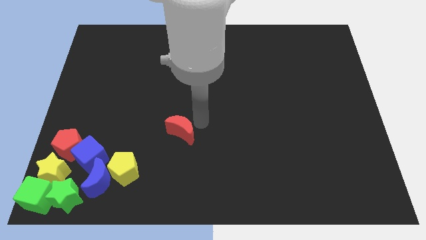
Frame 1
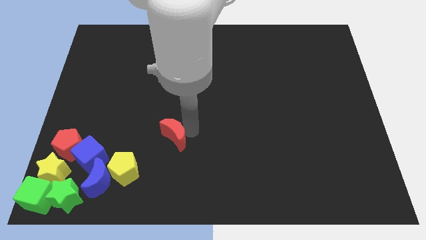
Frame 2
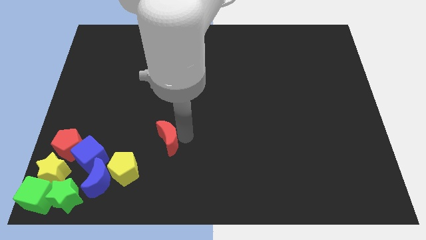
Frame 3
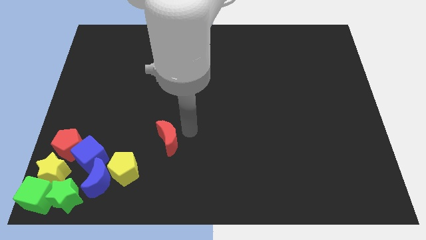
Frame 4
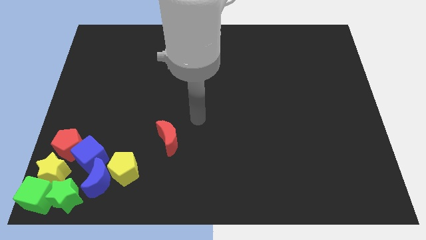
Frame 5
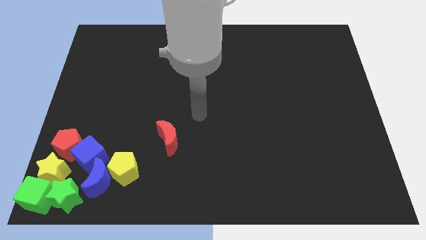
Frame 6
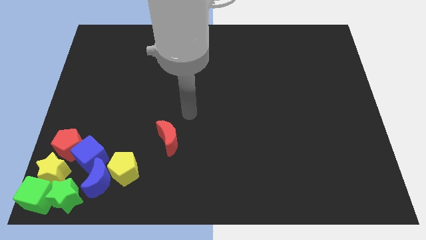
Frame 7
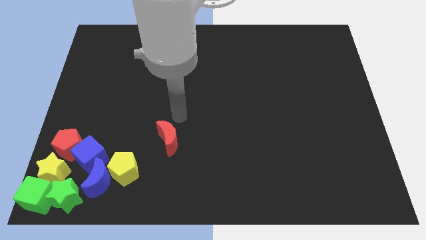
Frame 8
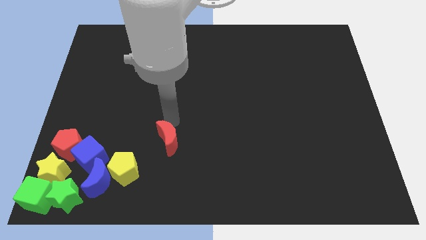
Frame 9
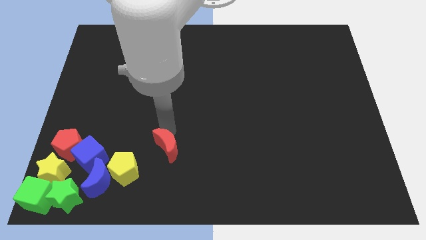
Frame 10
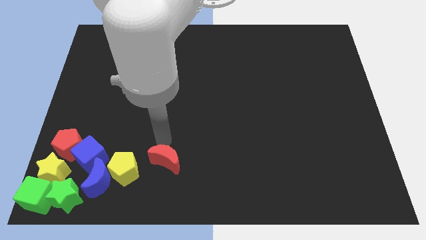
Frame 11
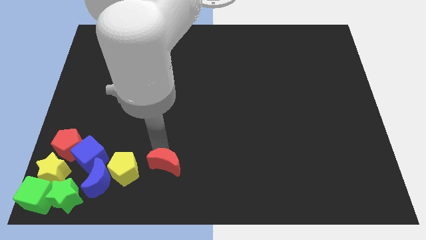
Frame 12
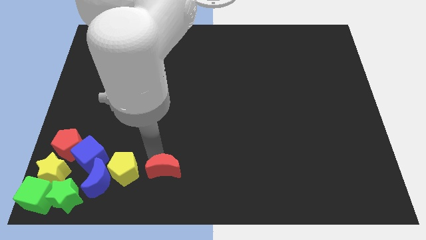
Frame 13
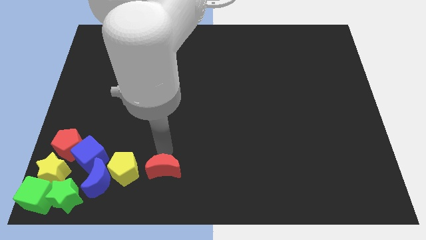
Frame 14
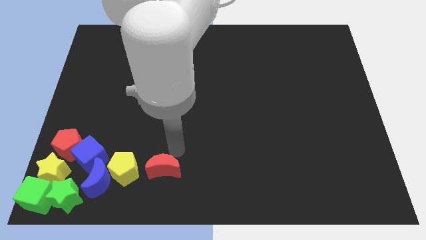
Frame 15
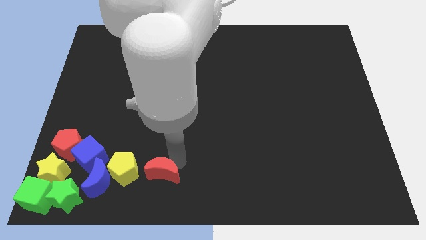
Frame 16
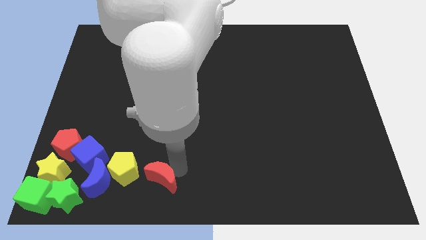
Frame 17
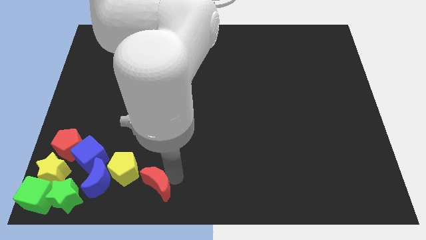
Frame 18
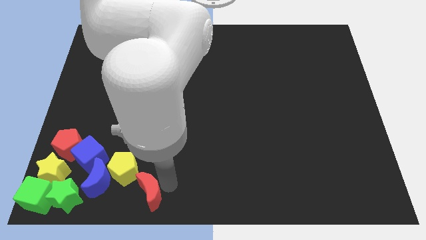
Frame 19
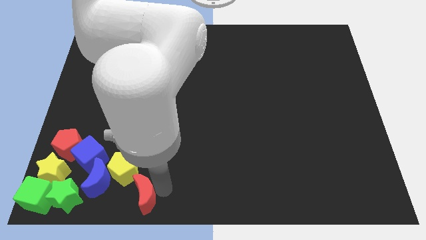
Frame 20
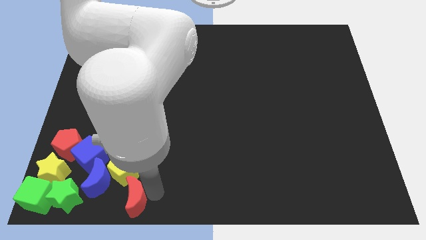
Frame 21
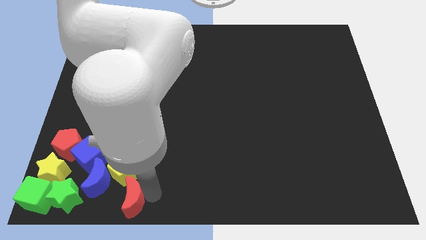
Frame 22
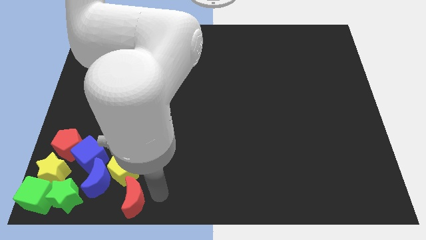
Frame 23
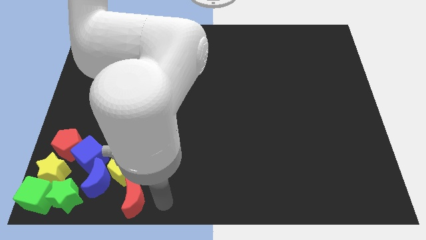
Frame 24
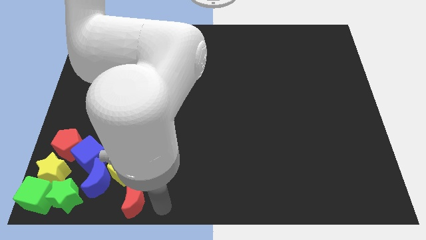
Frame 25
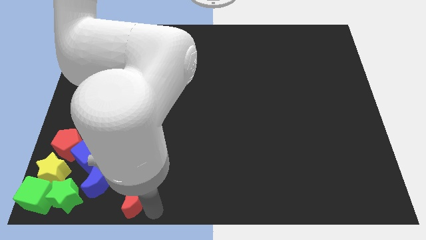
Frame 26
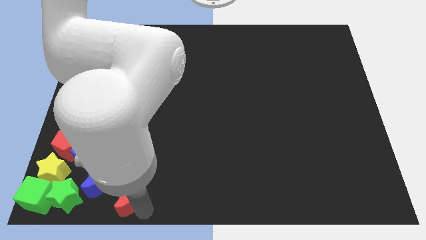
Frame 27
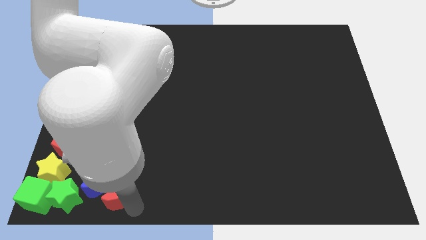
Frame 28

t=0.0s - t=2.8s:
place the red moon below the yellow pentagon

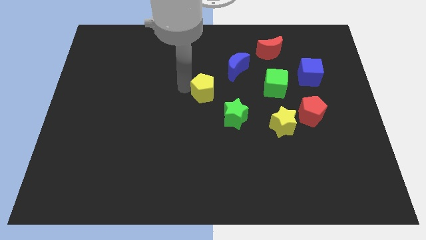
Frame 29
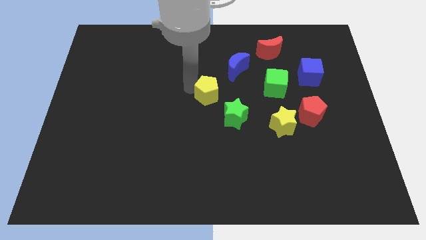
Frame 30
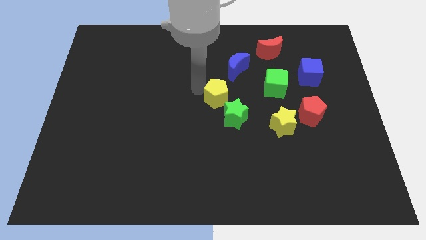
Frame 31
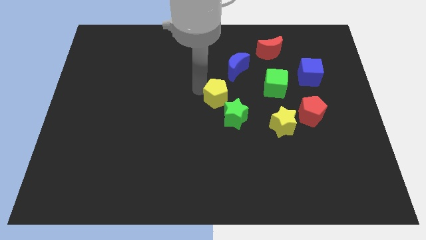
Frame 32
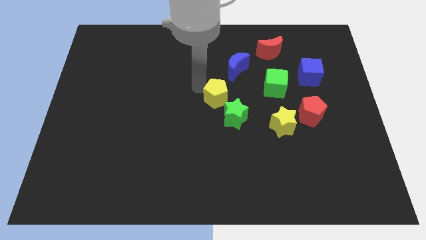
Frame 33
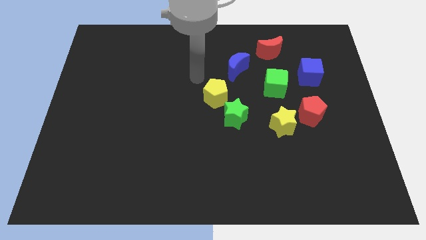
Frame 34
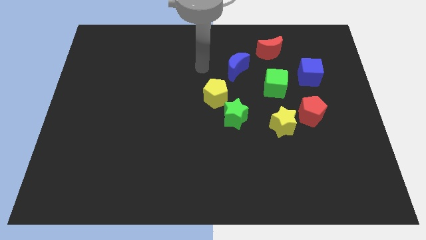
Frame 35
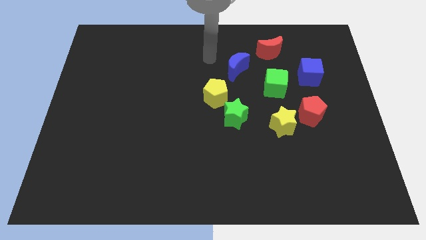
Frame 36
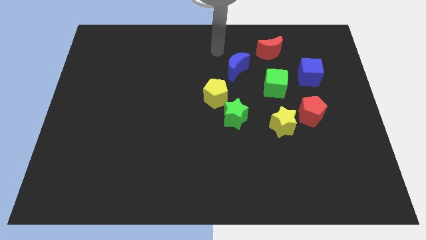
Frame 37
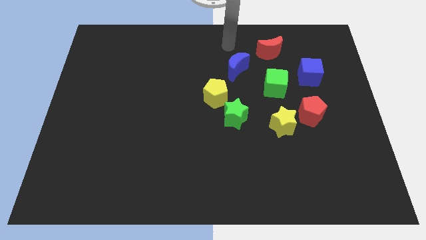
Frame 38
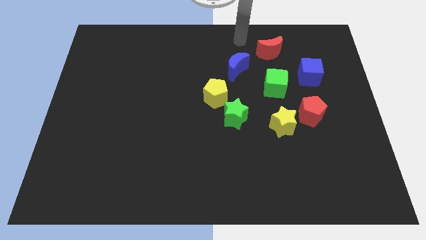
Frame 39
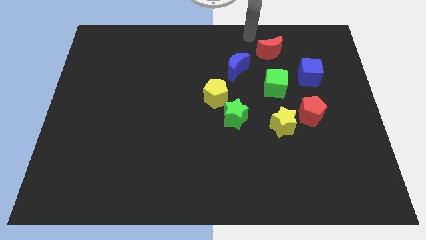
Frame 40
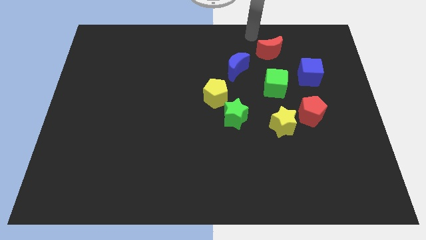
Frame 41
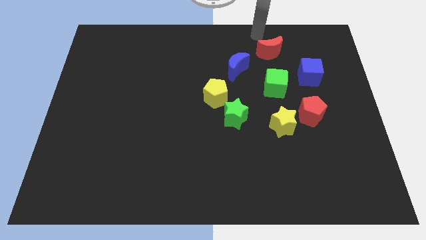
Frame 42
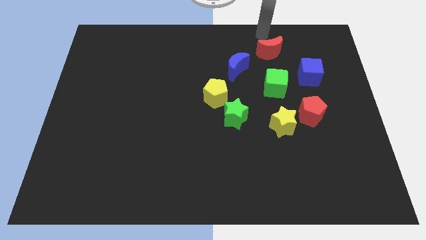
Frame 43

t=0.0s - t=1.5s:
move the yellow pentagon close to the green star

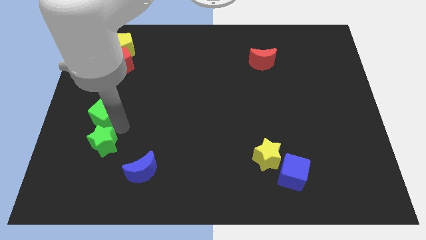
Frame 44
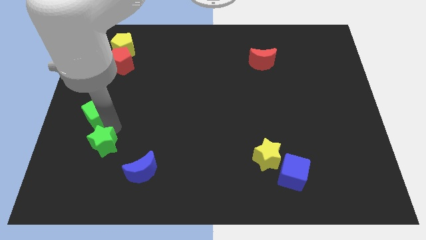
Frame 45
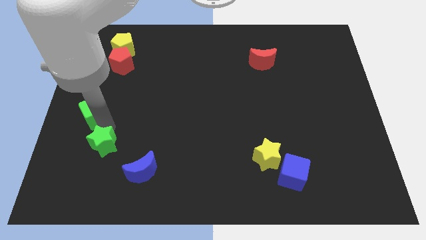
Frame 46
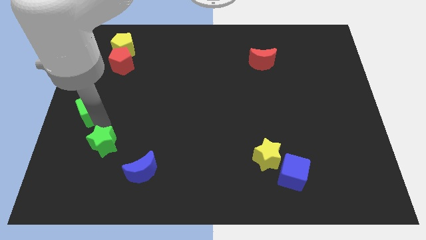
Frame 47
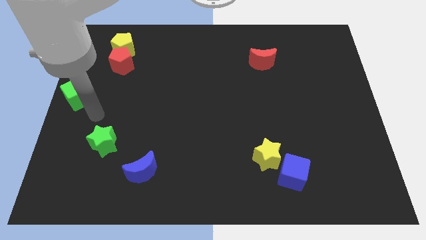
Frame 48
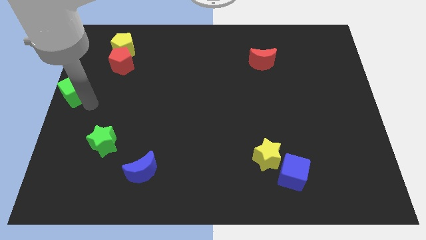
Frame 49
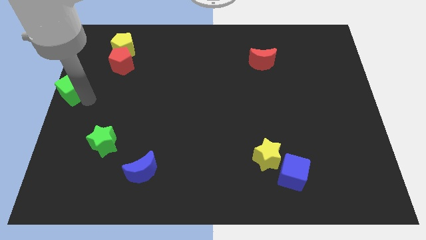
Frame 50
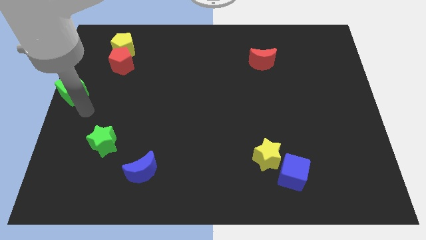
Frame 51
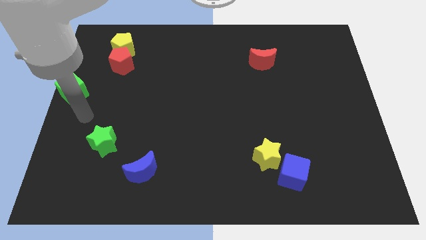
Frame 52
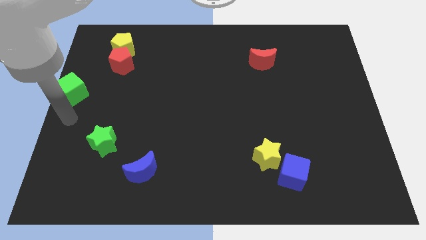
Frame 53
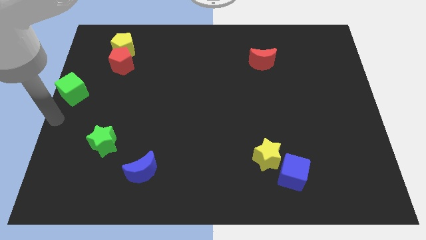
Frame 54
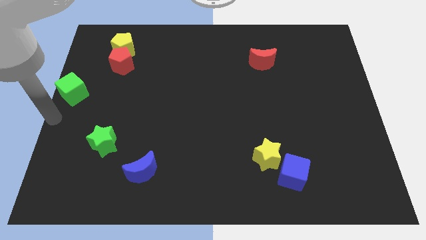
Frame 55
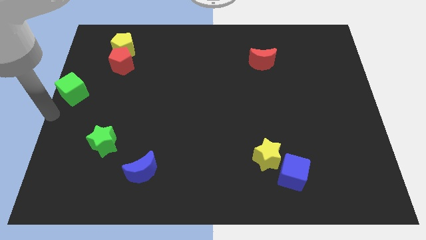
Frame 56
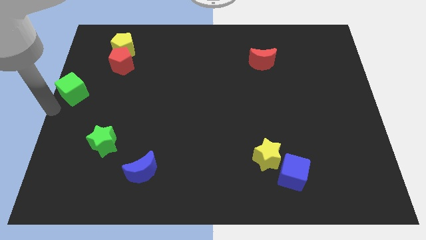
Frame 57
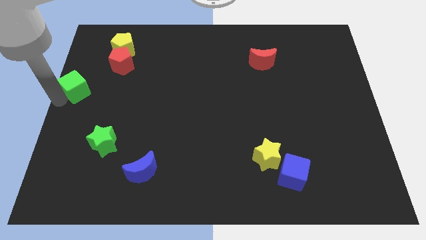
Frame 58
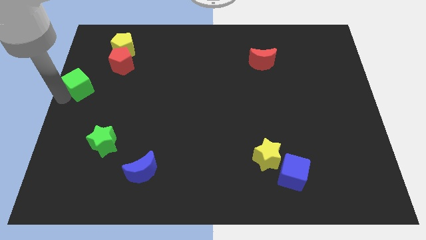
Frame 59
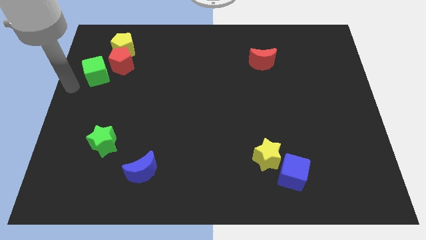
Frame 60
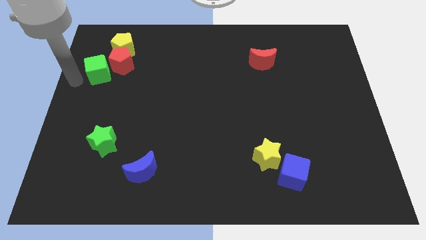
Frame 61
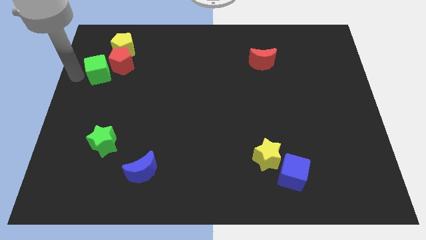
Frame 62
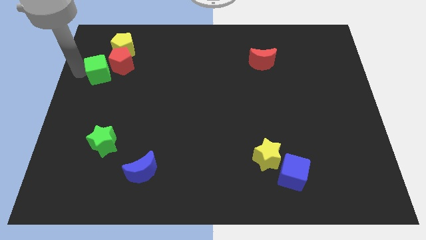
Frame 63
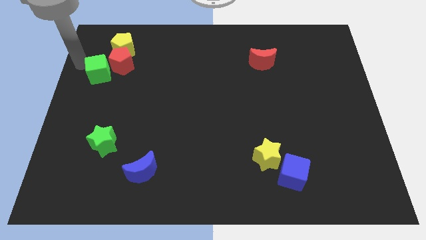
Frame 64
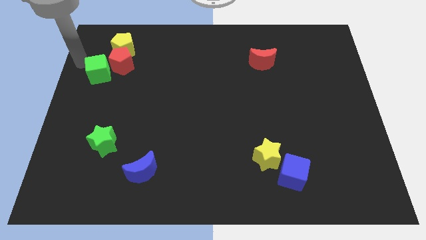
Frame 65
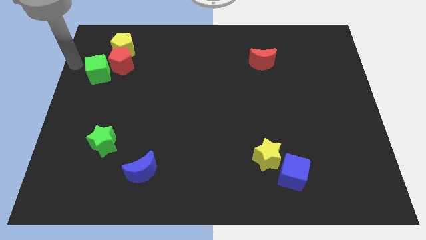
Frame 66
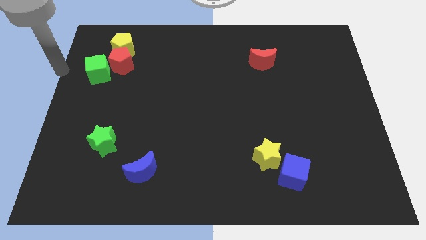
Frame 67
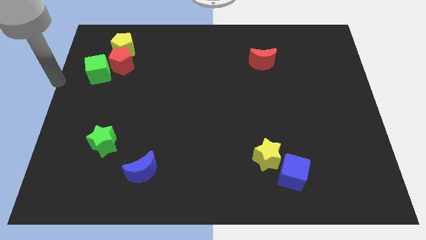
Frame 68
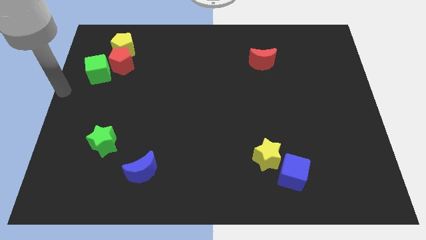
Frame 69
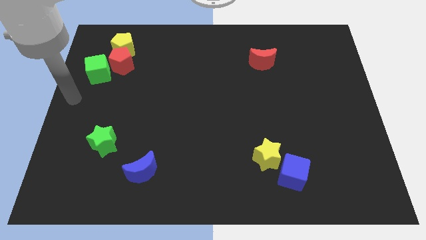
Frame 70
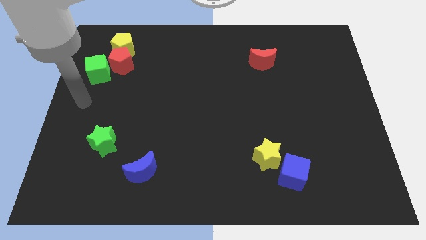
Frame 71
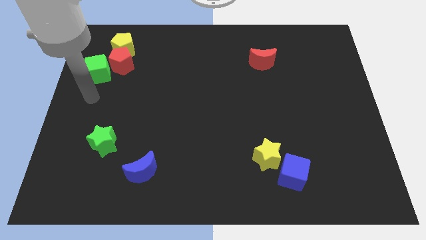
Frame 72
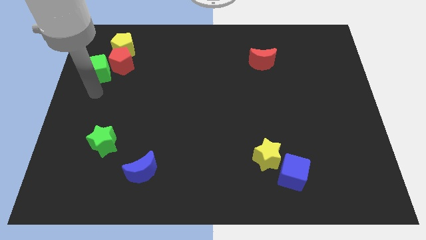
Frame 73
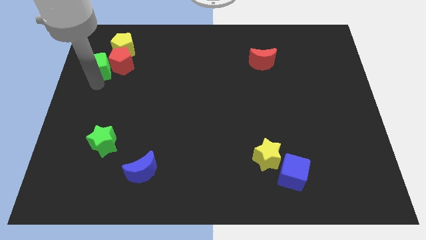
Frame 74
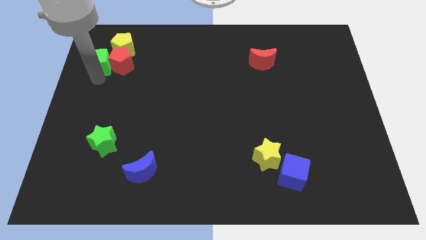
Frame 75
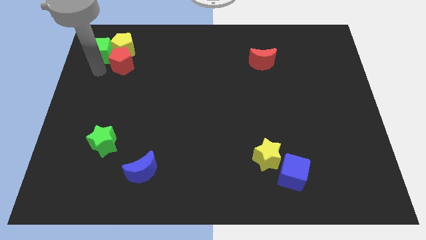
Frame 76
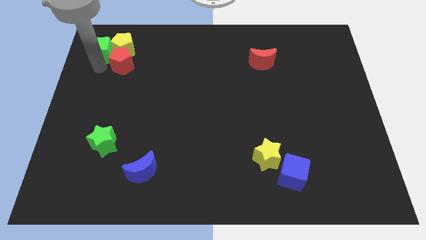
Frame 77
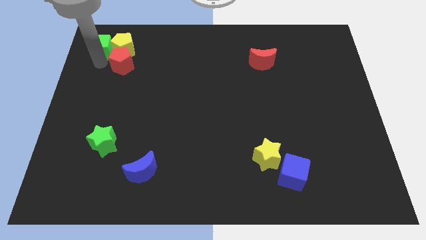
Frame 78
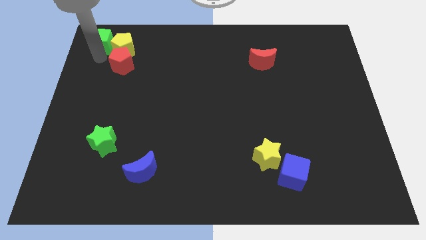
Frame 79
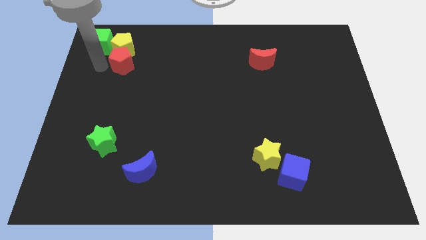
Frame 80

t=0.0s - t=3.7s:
move the green cube towards the left top corner of the board

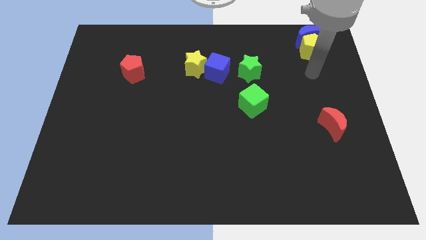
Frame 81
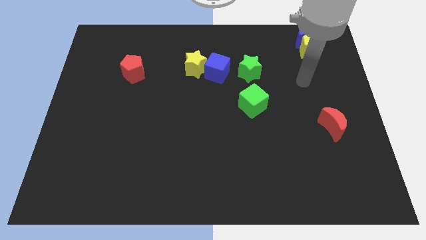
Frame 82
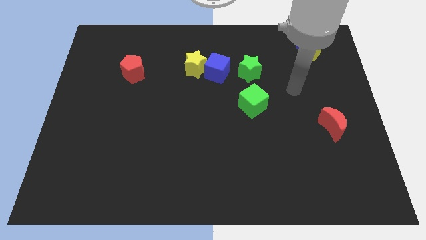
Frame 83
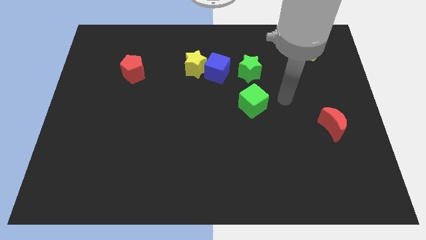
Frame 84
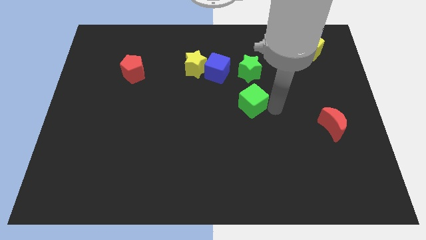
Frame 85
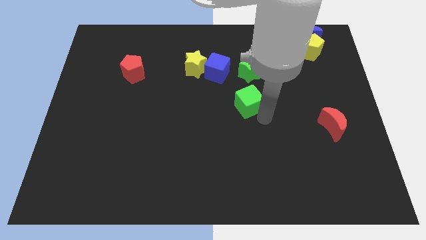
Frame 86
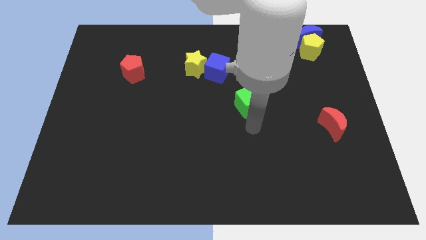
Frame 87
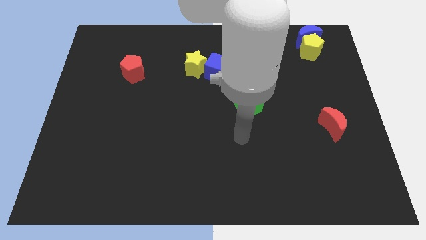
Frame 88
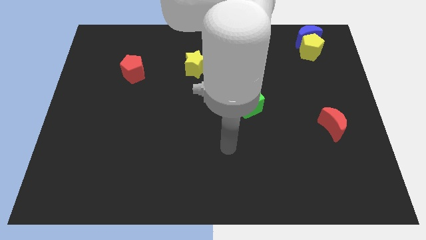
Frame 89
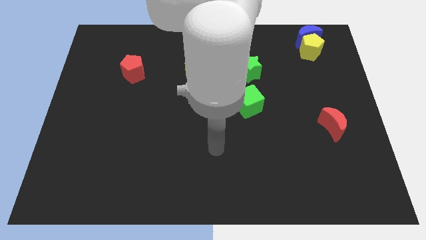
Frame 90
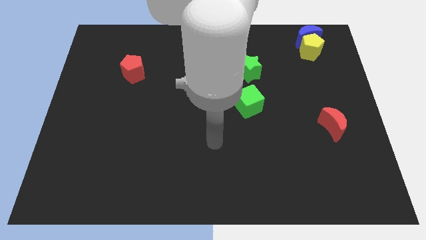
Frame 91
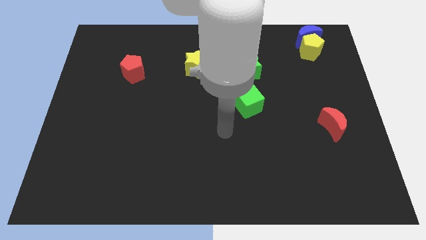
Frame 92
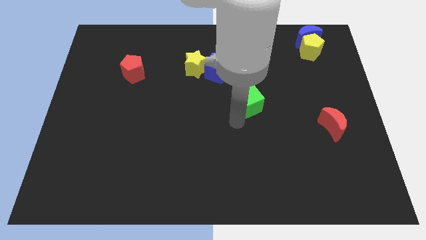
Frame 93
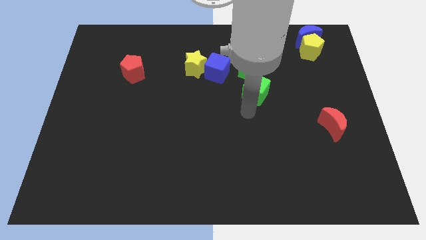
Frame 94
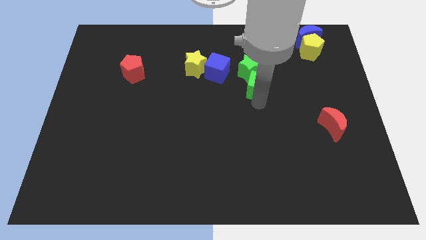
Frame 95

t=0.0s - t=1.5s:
push green cube into the green star
